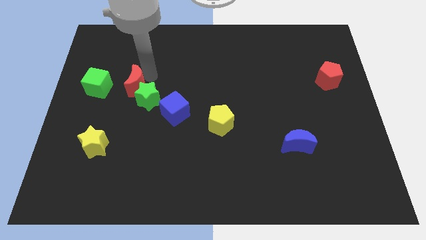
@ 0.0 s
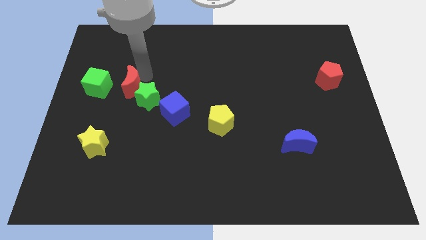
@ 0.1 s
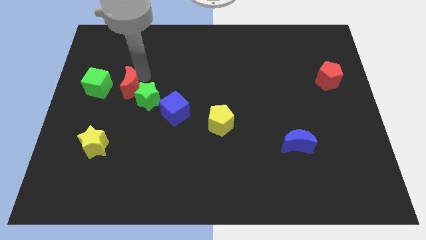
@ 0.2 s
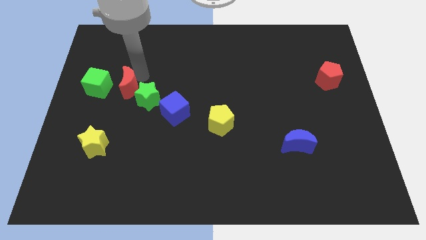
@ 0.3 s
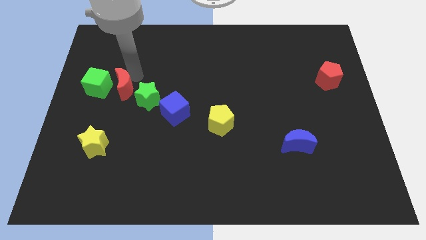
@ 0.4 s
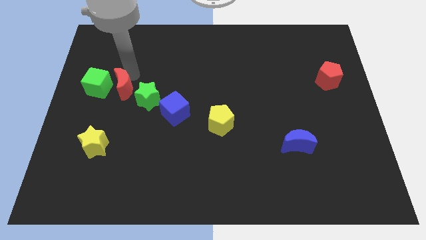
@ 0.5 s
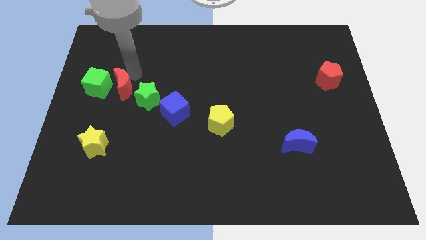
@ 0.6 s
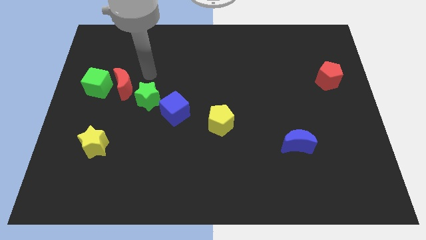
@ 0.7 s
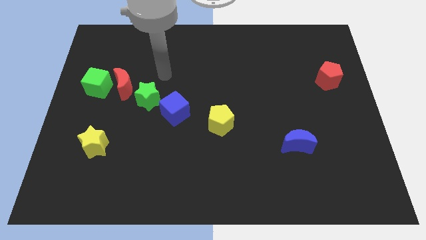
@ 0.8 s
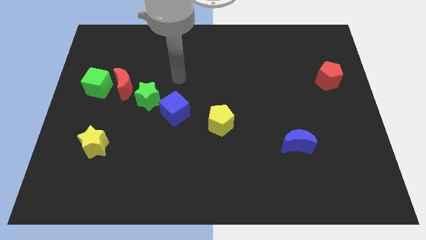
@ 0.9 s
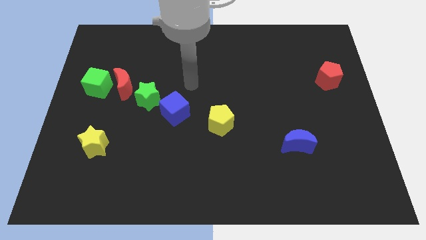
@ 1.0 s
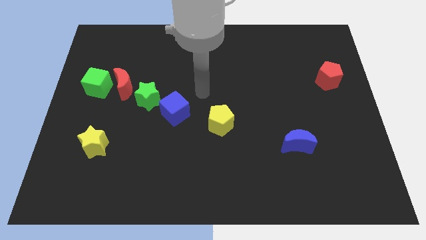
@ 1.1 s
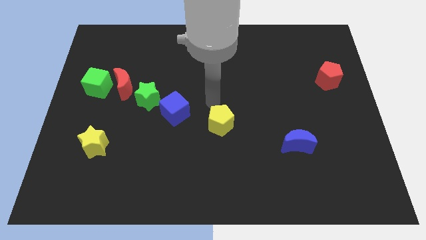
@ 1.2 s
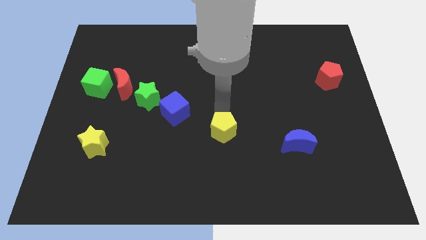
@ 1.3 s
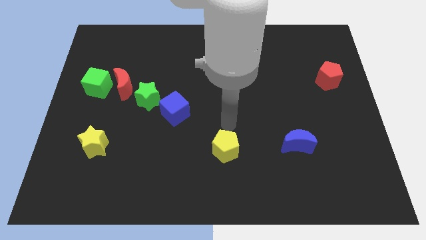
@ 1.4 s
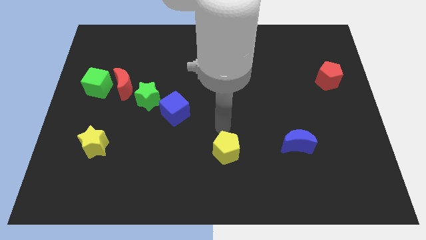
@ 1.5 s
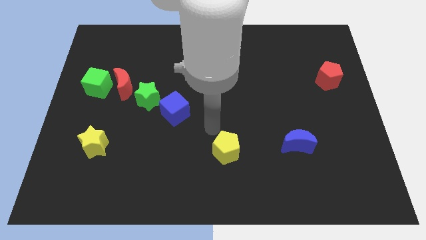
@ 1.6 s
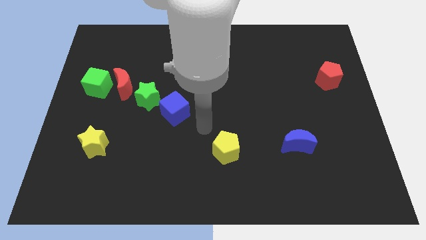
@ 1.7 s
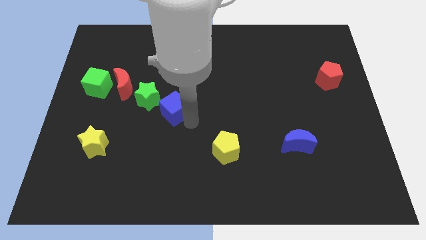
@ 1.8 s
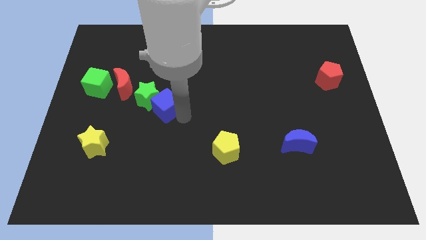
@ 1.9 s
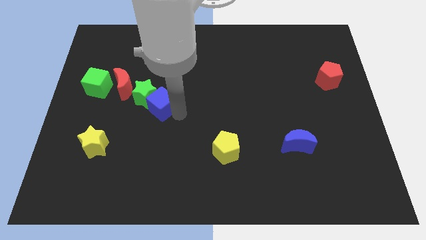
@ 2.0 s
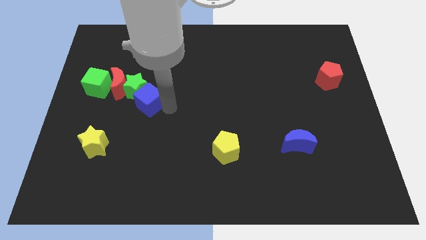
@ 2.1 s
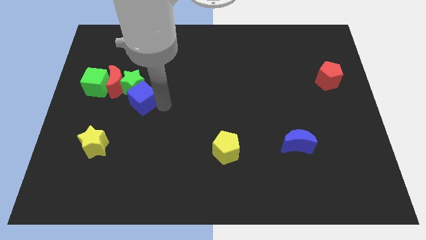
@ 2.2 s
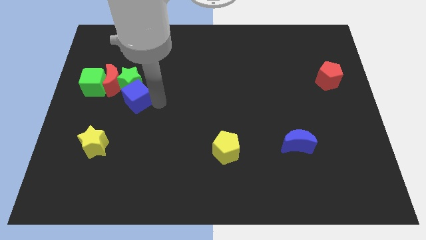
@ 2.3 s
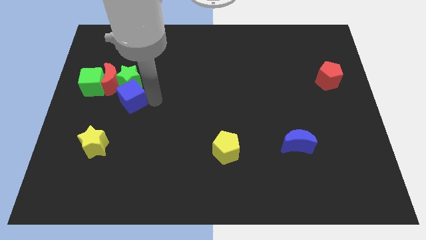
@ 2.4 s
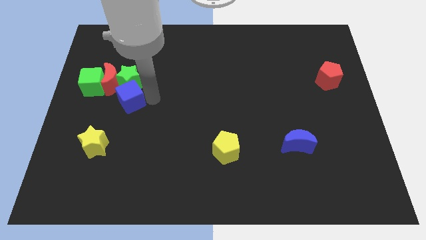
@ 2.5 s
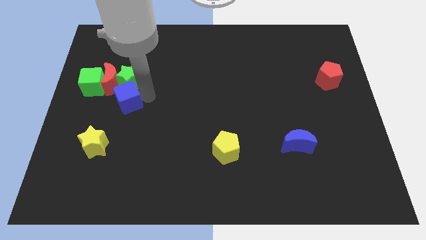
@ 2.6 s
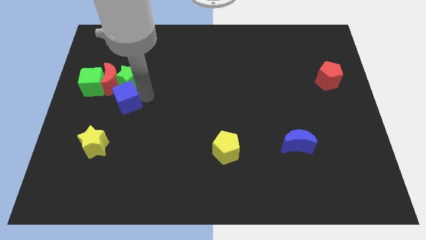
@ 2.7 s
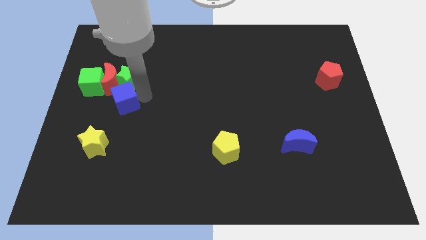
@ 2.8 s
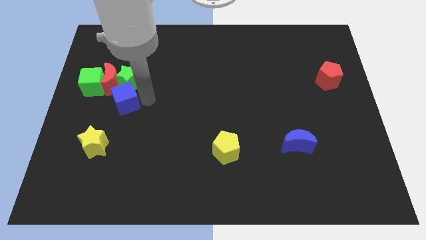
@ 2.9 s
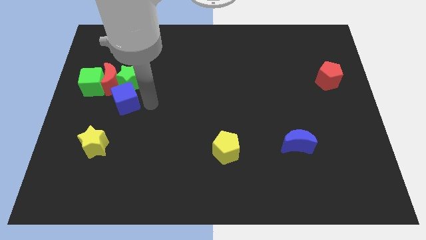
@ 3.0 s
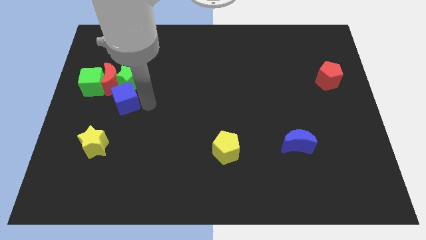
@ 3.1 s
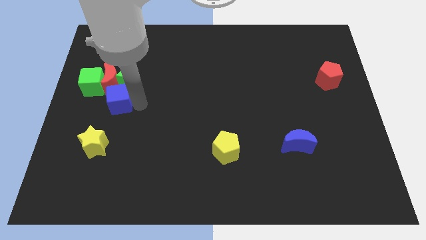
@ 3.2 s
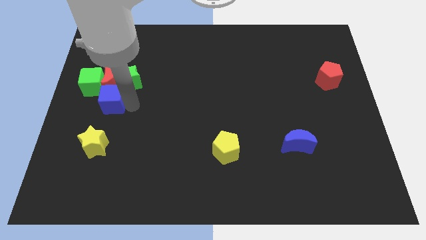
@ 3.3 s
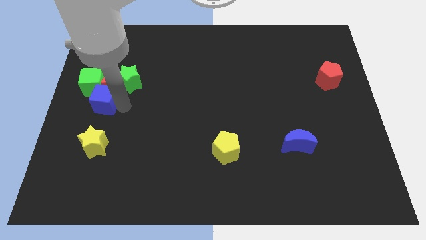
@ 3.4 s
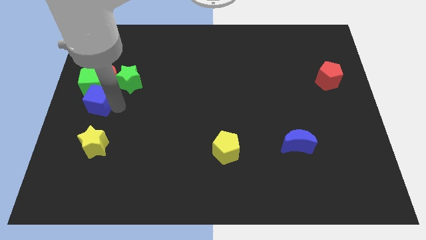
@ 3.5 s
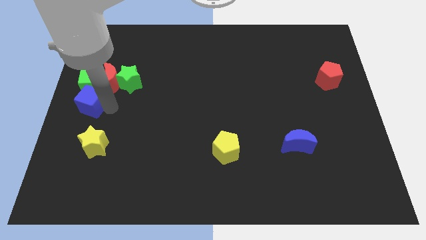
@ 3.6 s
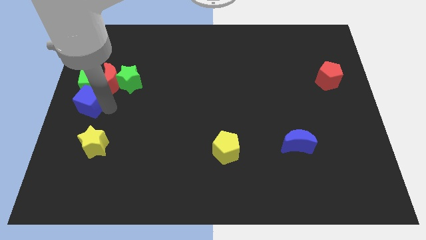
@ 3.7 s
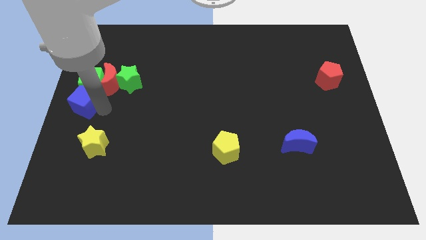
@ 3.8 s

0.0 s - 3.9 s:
push the blue cube down to the green cube

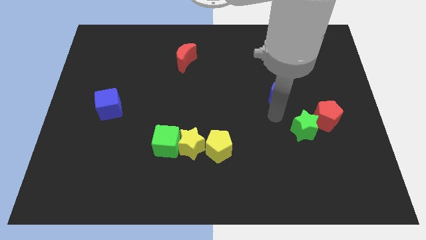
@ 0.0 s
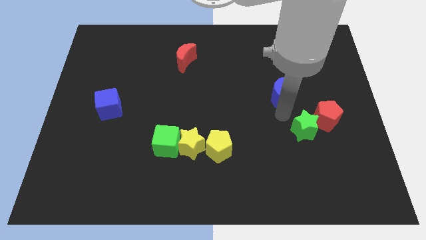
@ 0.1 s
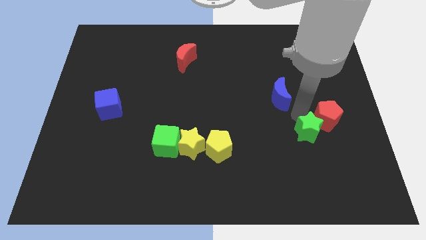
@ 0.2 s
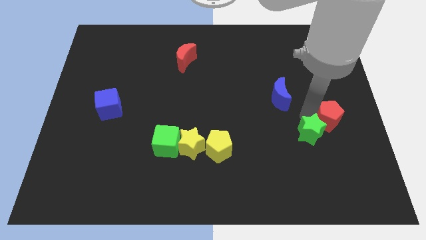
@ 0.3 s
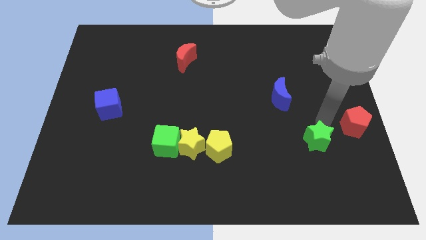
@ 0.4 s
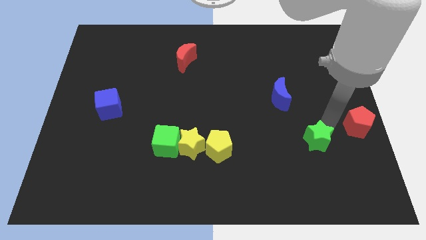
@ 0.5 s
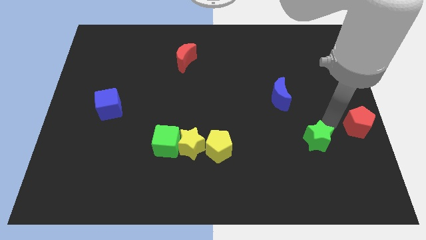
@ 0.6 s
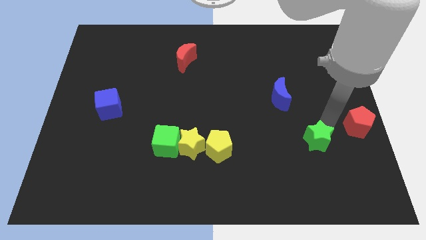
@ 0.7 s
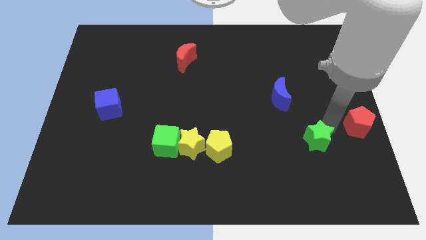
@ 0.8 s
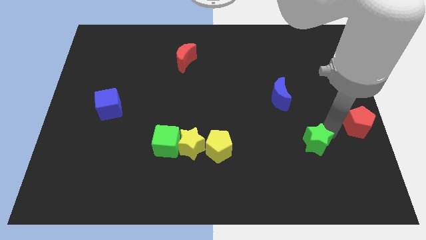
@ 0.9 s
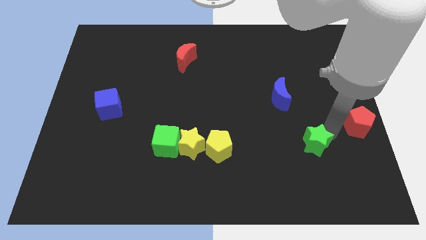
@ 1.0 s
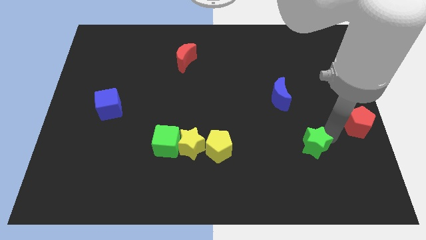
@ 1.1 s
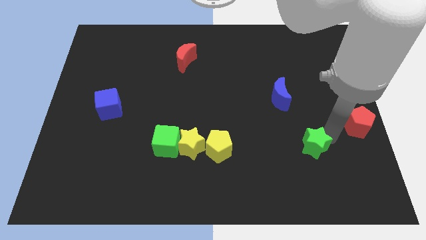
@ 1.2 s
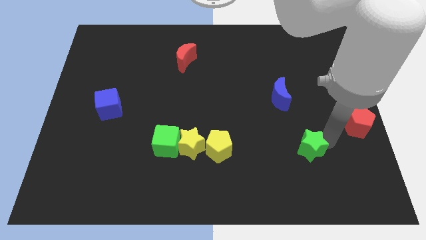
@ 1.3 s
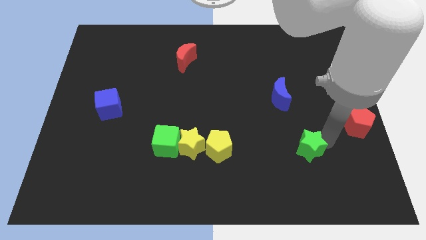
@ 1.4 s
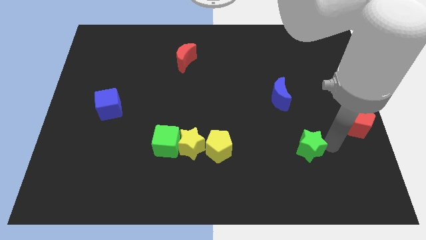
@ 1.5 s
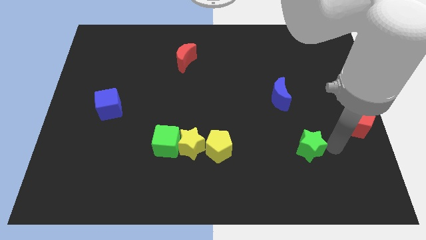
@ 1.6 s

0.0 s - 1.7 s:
separate the green star from the red pentagon

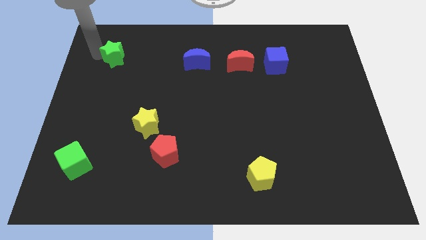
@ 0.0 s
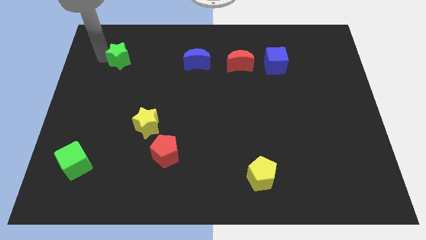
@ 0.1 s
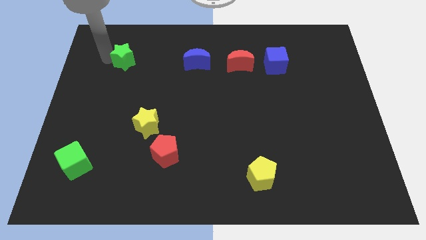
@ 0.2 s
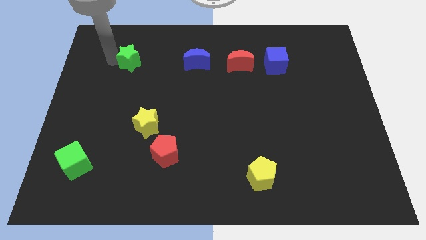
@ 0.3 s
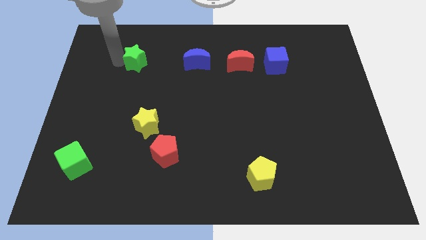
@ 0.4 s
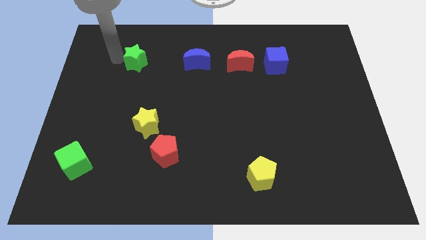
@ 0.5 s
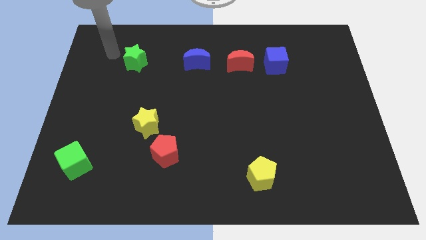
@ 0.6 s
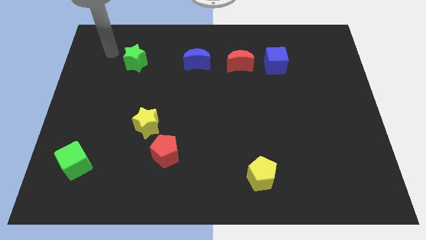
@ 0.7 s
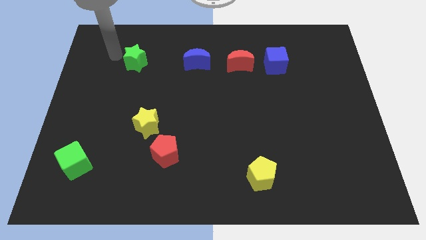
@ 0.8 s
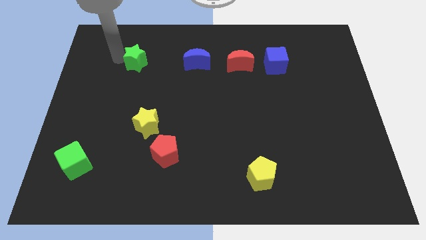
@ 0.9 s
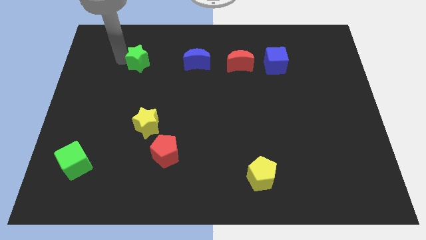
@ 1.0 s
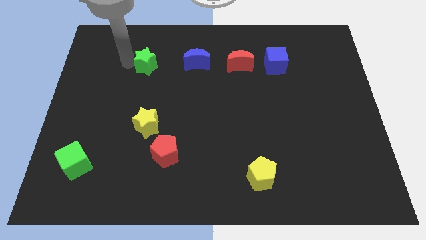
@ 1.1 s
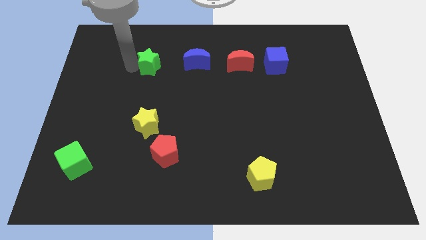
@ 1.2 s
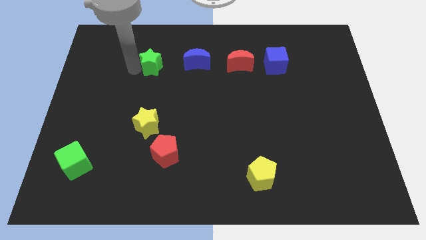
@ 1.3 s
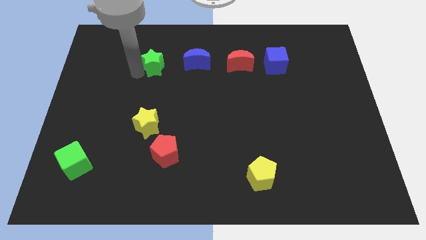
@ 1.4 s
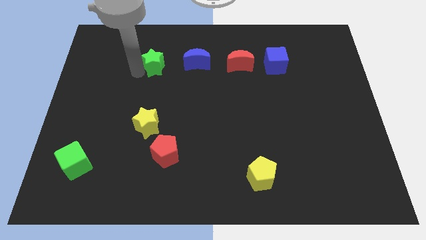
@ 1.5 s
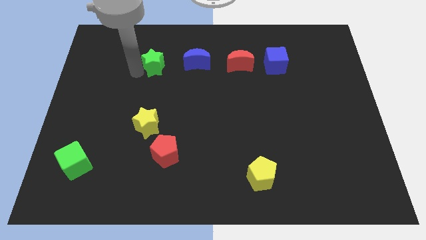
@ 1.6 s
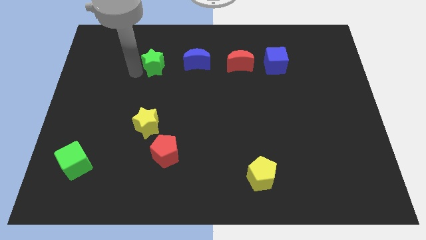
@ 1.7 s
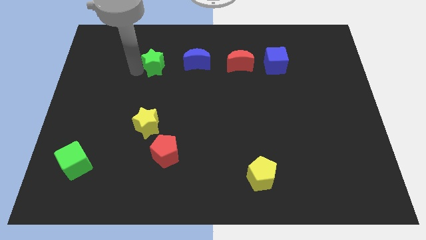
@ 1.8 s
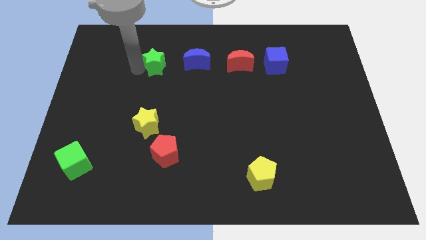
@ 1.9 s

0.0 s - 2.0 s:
push the green star towards the blue crescent

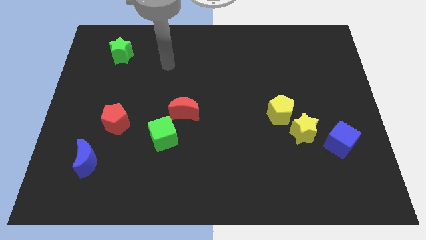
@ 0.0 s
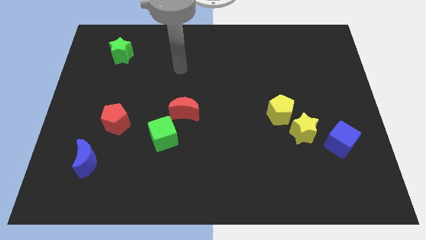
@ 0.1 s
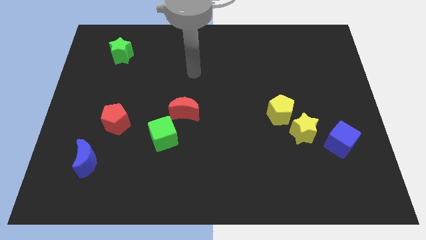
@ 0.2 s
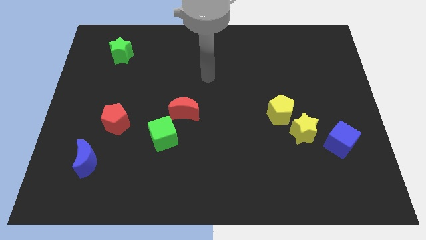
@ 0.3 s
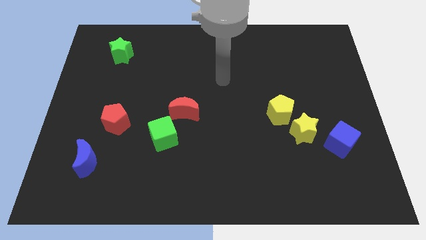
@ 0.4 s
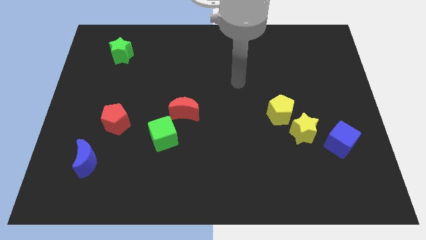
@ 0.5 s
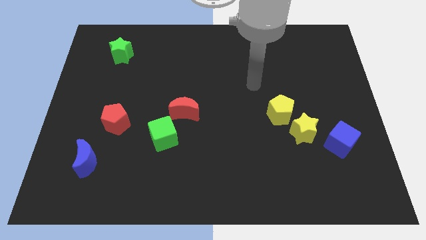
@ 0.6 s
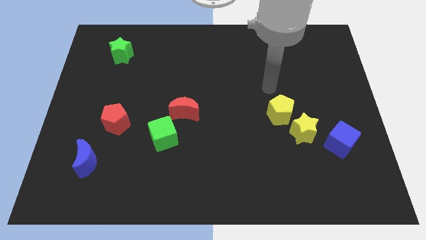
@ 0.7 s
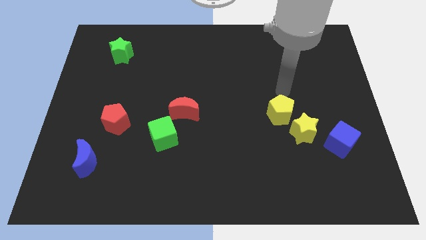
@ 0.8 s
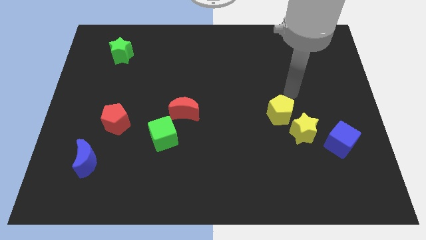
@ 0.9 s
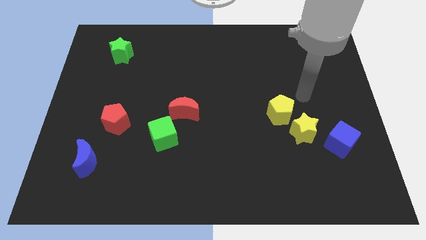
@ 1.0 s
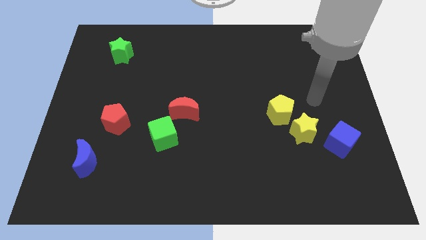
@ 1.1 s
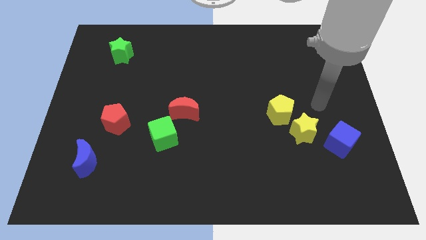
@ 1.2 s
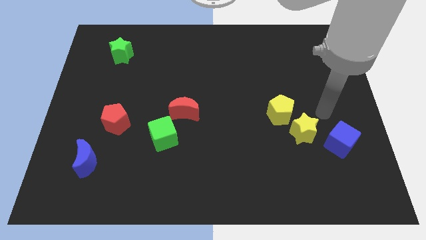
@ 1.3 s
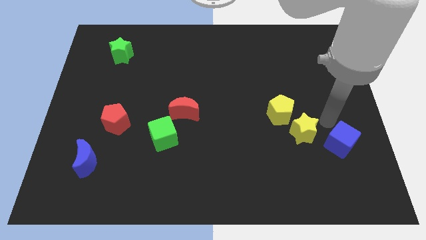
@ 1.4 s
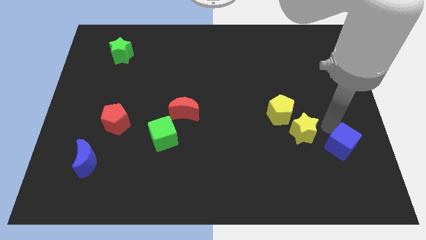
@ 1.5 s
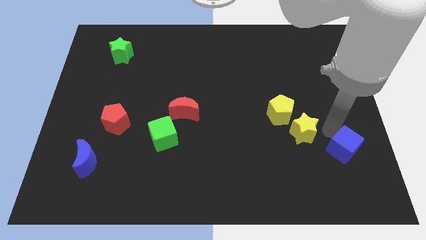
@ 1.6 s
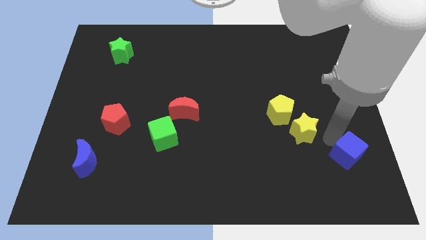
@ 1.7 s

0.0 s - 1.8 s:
move arm towards blue cube
